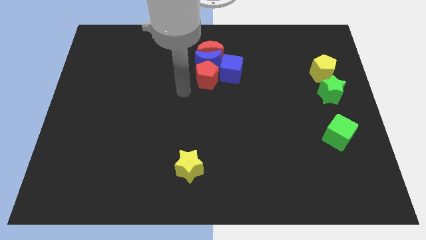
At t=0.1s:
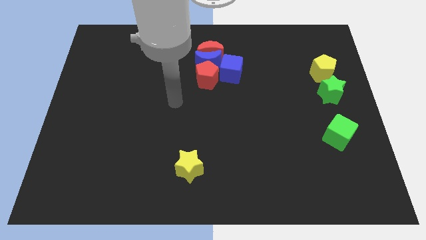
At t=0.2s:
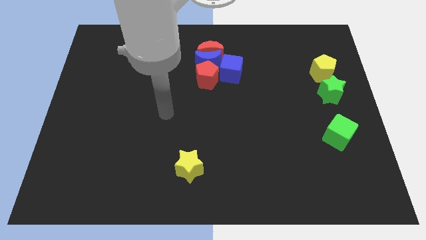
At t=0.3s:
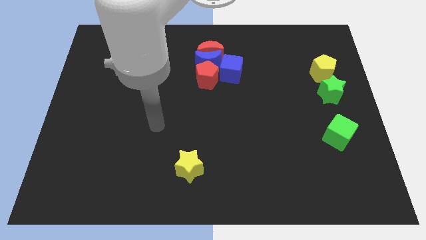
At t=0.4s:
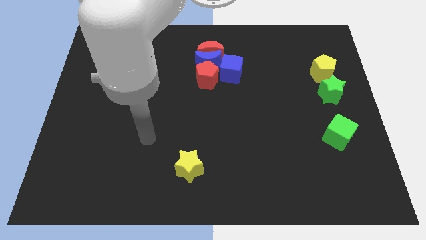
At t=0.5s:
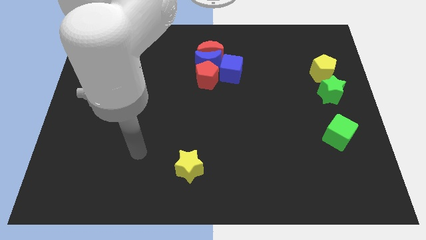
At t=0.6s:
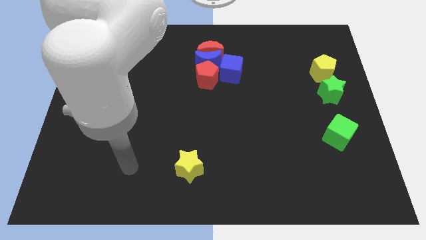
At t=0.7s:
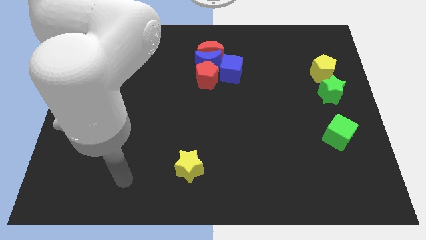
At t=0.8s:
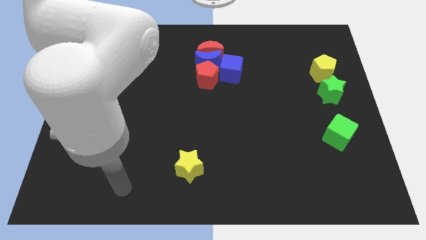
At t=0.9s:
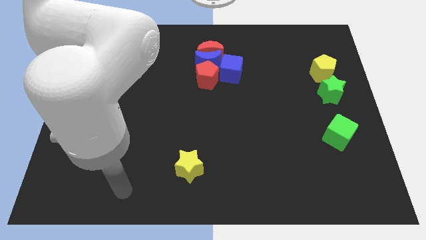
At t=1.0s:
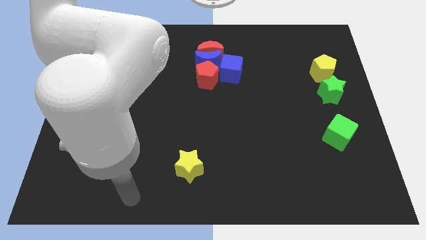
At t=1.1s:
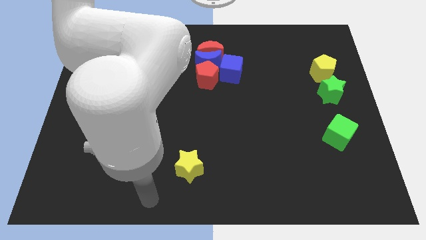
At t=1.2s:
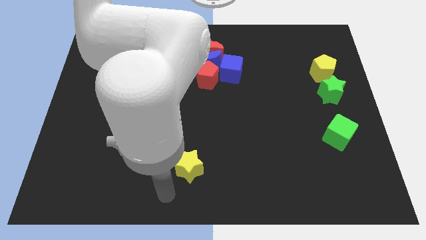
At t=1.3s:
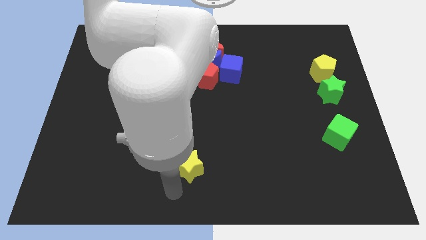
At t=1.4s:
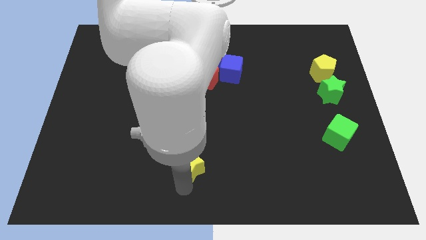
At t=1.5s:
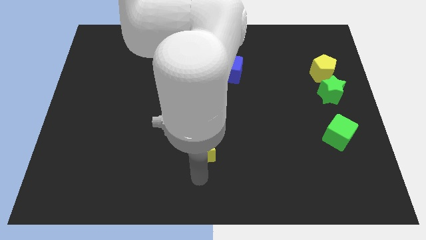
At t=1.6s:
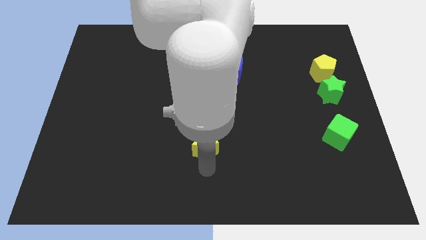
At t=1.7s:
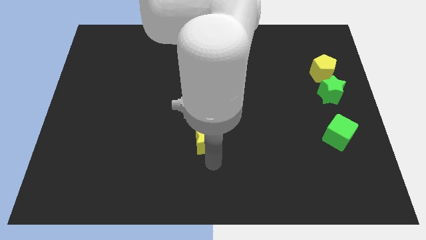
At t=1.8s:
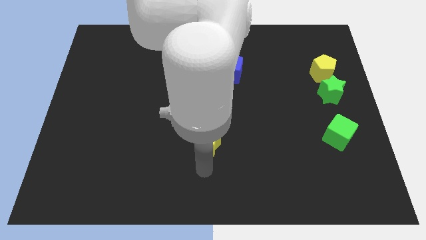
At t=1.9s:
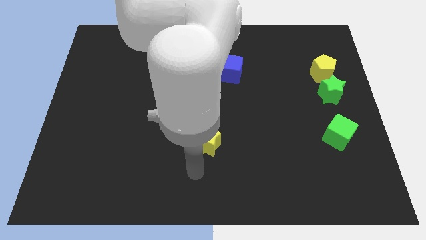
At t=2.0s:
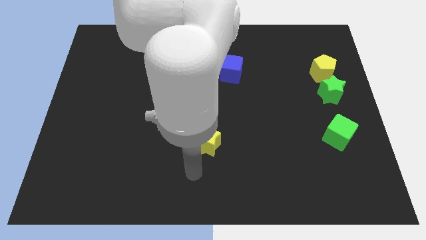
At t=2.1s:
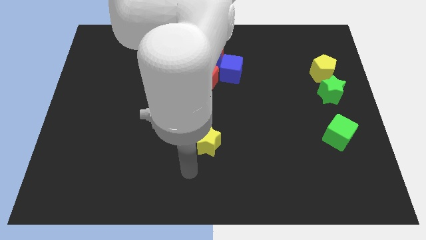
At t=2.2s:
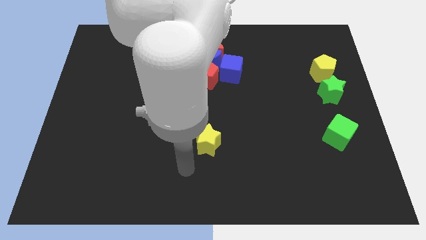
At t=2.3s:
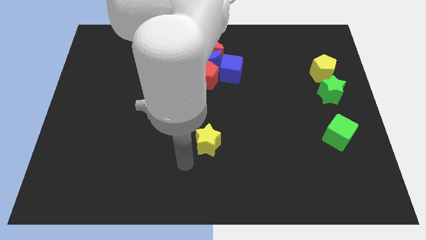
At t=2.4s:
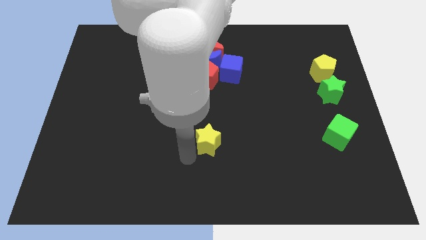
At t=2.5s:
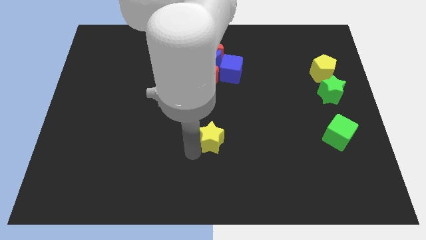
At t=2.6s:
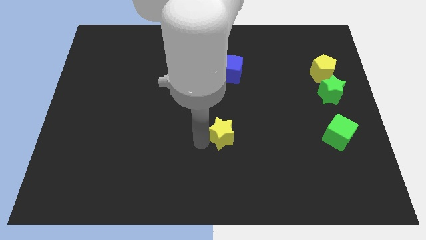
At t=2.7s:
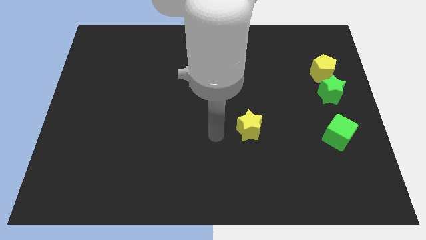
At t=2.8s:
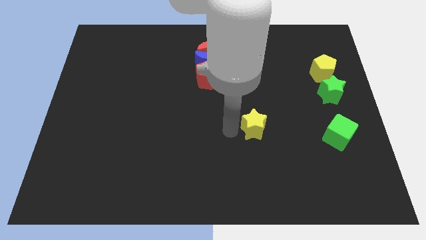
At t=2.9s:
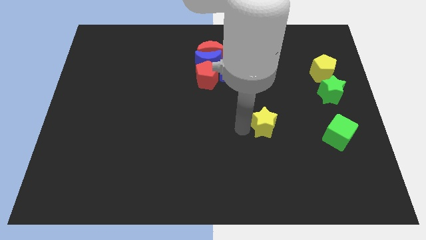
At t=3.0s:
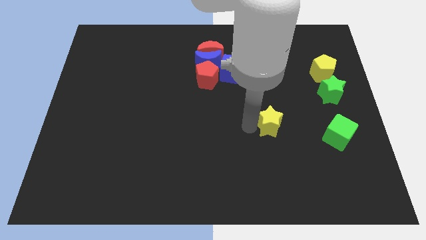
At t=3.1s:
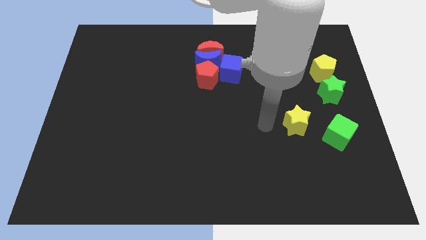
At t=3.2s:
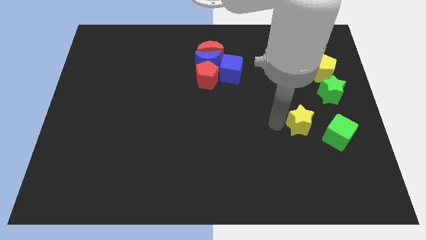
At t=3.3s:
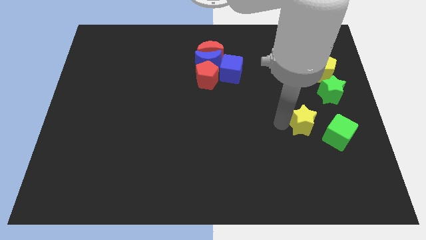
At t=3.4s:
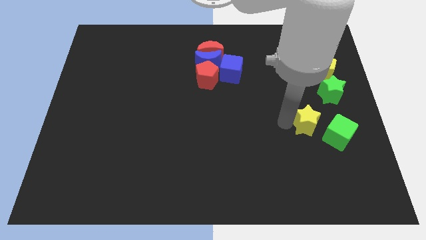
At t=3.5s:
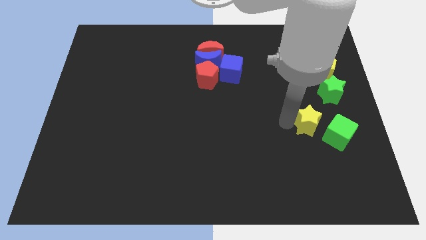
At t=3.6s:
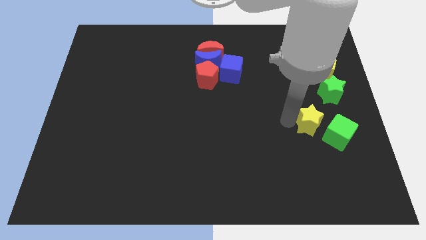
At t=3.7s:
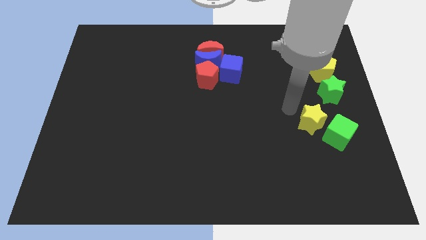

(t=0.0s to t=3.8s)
push the yellow star towards the right side of the green cube

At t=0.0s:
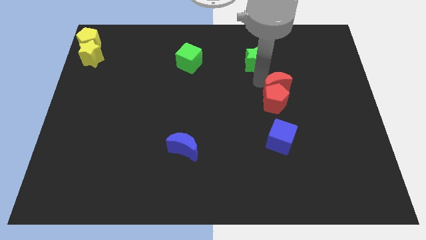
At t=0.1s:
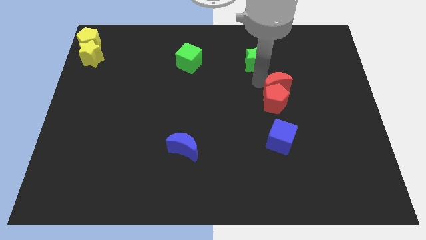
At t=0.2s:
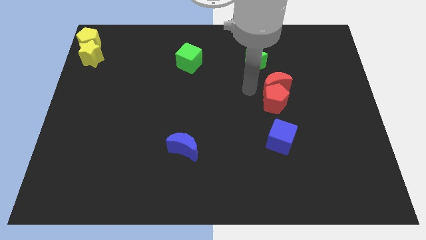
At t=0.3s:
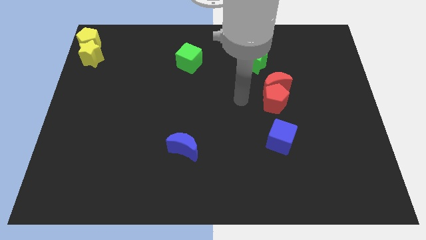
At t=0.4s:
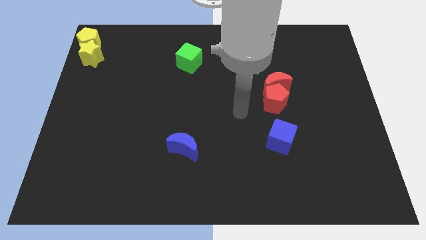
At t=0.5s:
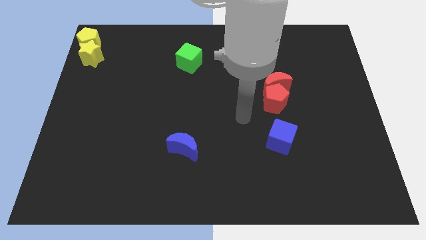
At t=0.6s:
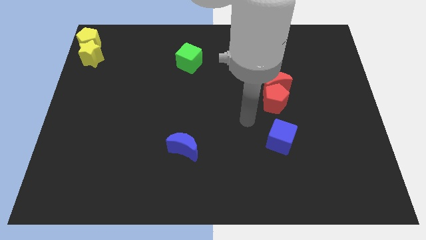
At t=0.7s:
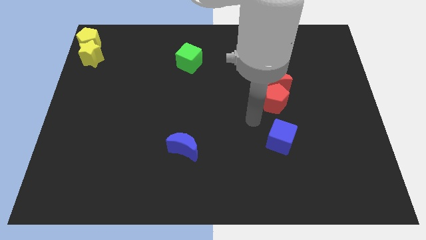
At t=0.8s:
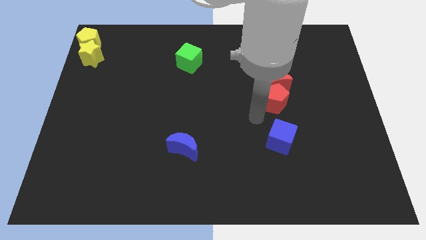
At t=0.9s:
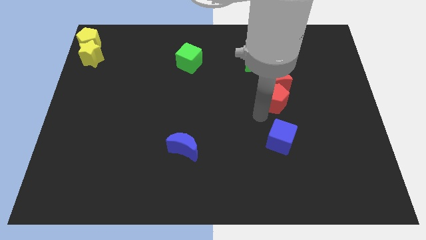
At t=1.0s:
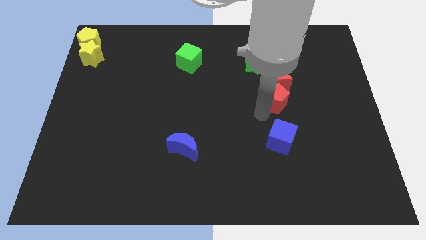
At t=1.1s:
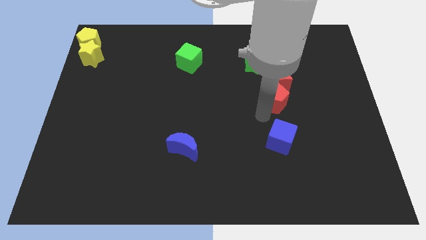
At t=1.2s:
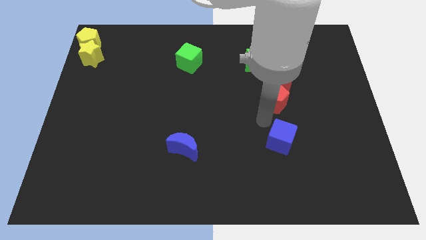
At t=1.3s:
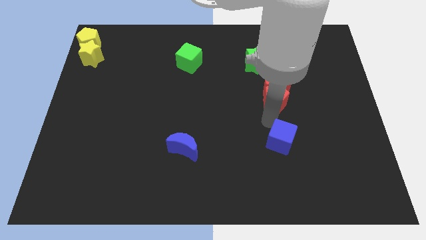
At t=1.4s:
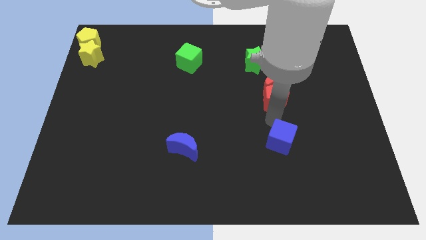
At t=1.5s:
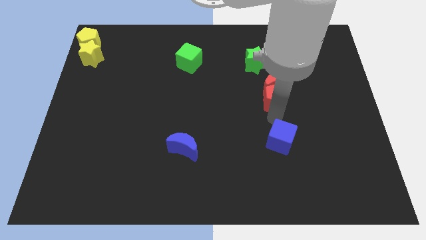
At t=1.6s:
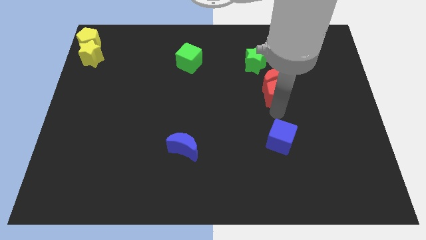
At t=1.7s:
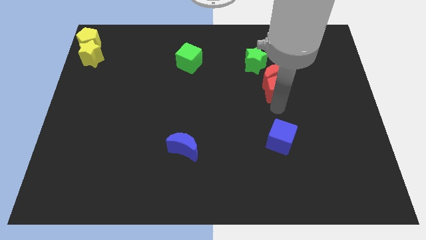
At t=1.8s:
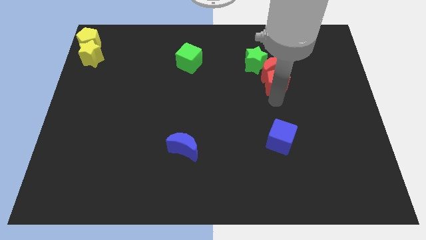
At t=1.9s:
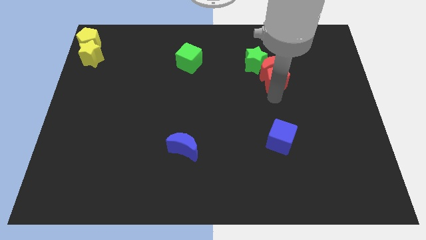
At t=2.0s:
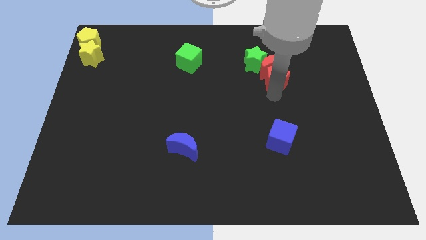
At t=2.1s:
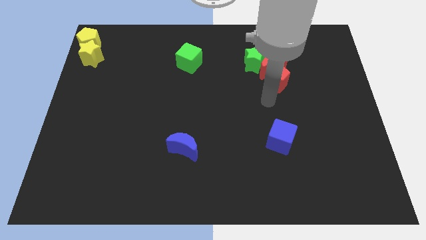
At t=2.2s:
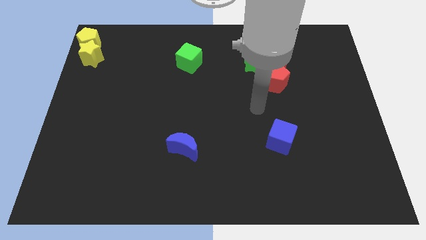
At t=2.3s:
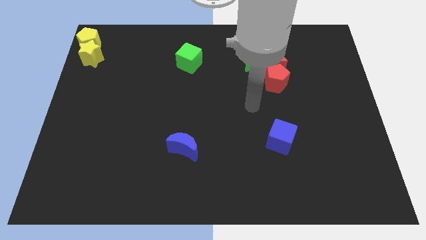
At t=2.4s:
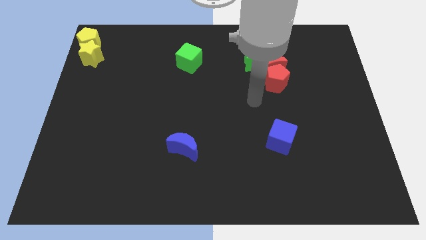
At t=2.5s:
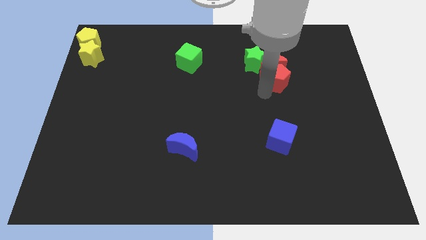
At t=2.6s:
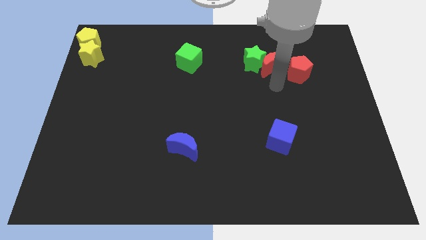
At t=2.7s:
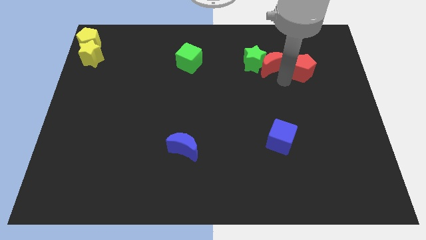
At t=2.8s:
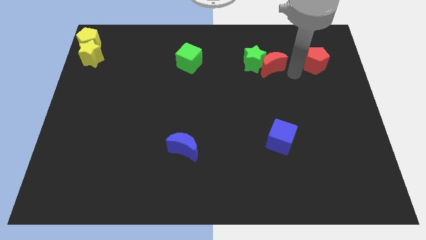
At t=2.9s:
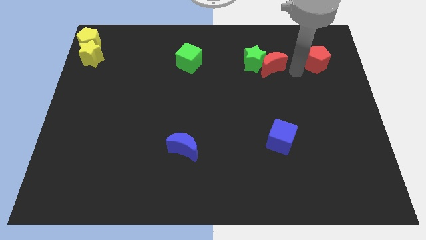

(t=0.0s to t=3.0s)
push the red blocks to the right of the green star

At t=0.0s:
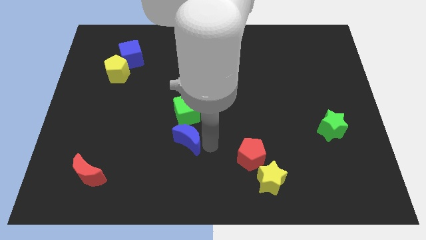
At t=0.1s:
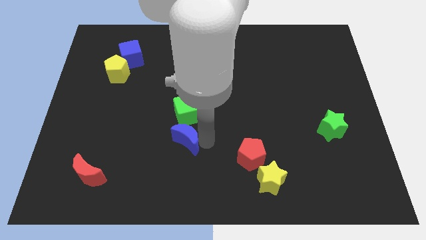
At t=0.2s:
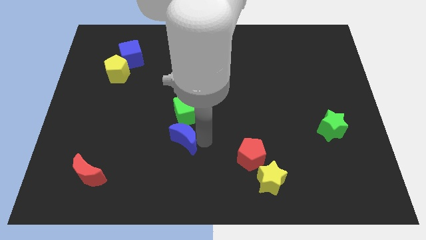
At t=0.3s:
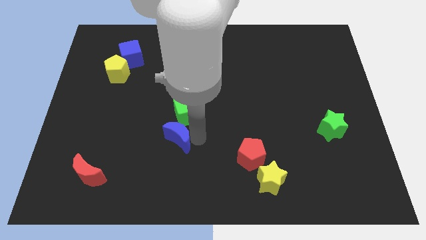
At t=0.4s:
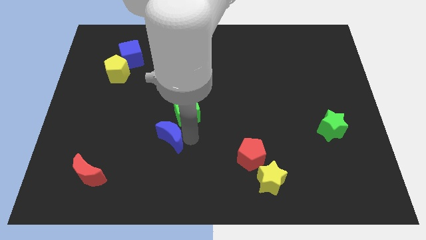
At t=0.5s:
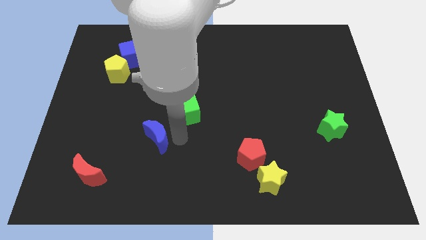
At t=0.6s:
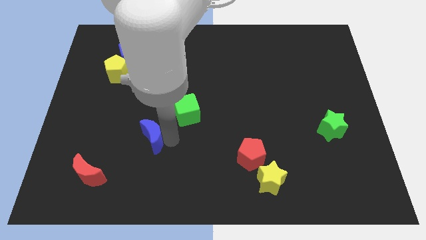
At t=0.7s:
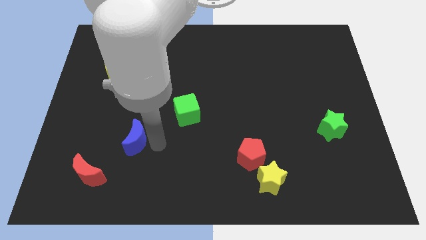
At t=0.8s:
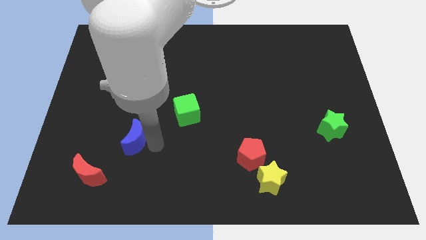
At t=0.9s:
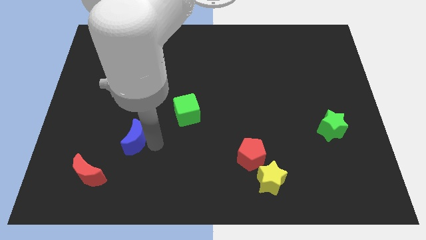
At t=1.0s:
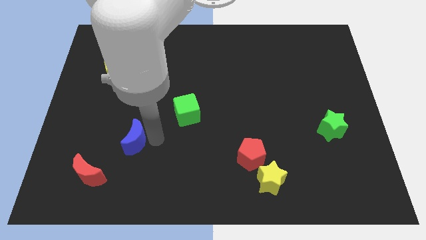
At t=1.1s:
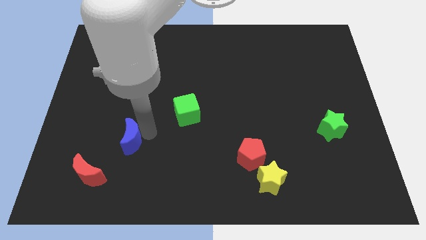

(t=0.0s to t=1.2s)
put the blue crescent to the top right of the red crescent

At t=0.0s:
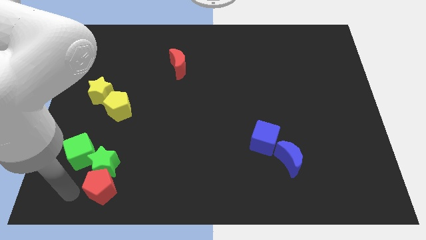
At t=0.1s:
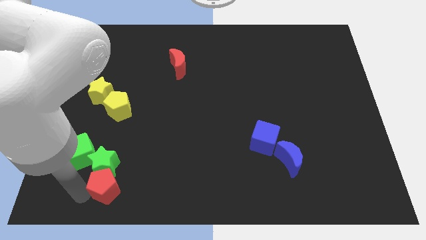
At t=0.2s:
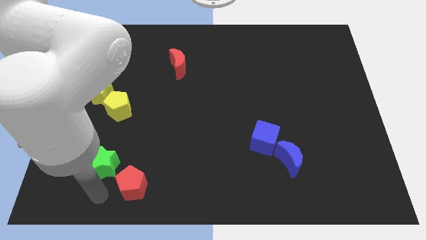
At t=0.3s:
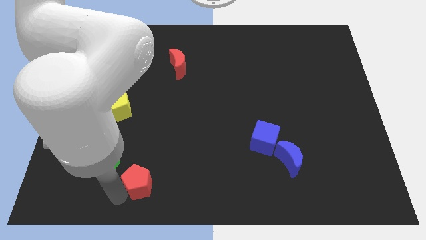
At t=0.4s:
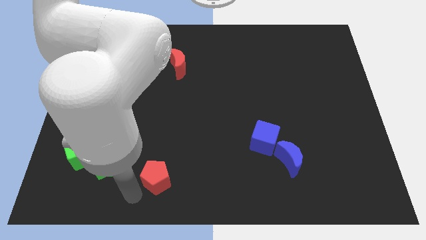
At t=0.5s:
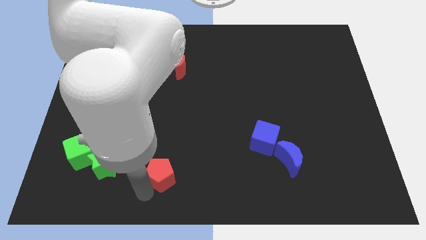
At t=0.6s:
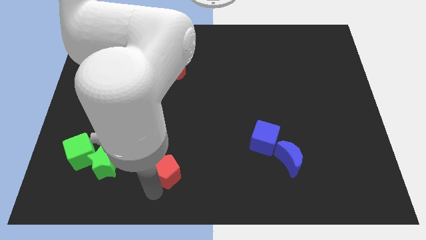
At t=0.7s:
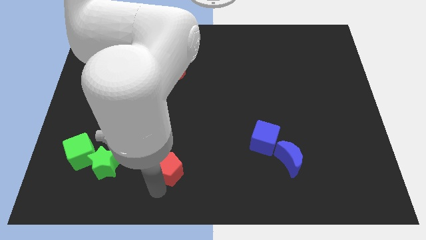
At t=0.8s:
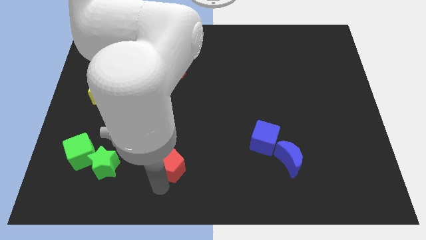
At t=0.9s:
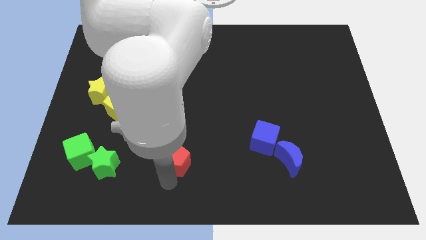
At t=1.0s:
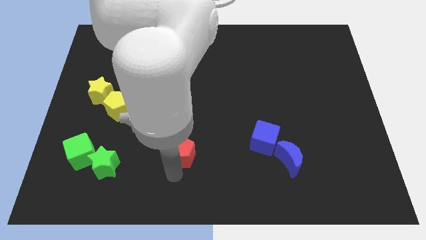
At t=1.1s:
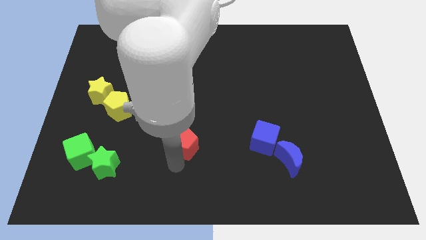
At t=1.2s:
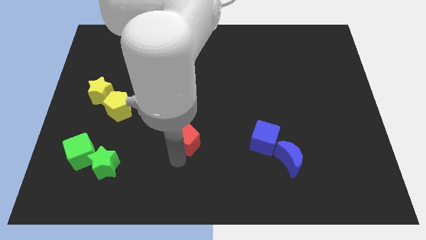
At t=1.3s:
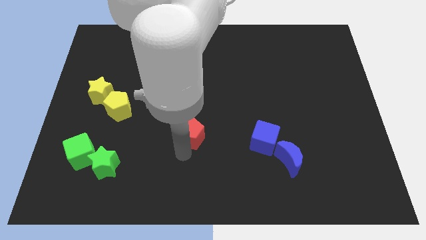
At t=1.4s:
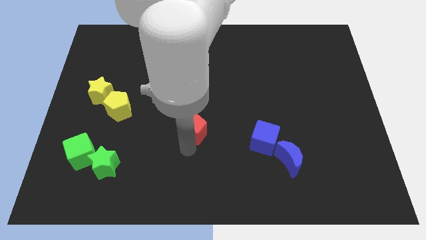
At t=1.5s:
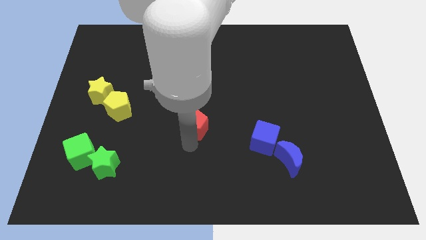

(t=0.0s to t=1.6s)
move the red pentagon away from the bottom side of the green star
